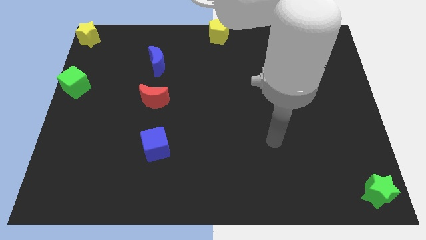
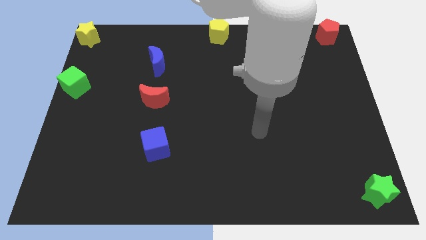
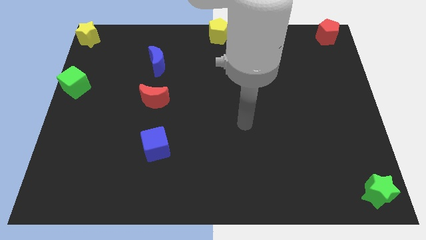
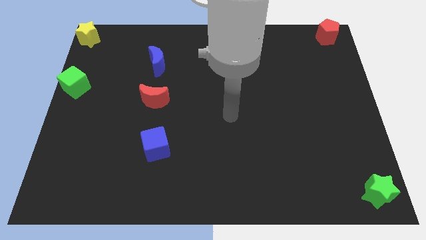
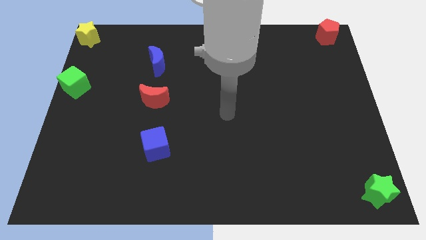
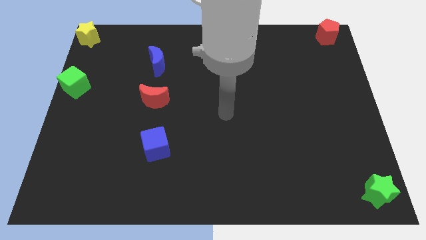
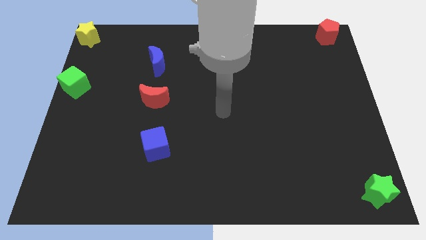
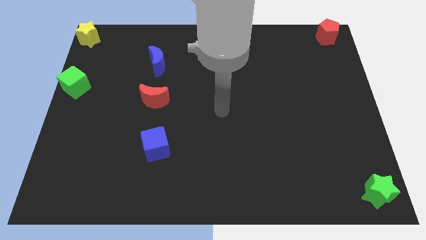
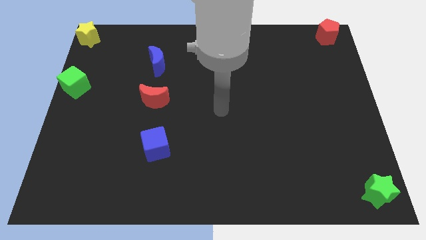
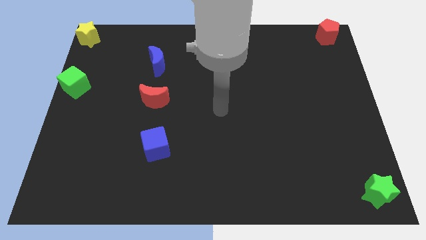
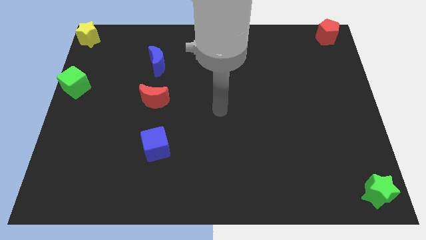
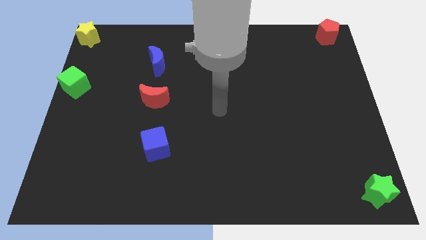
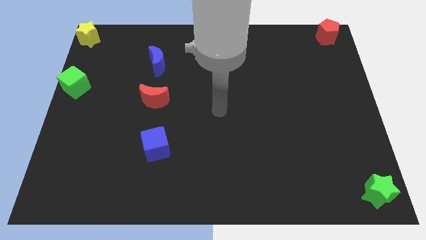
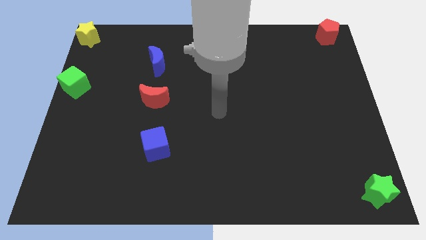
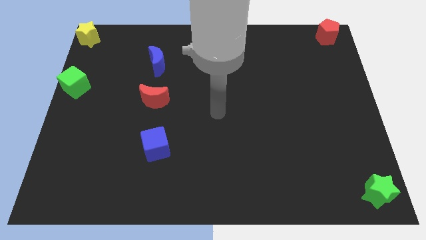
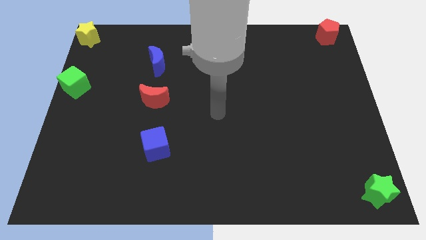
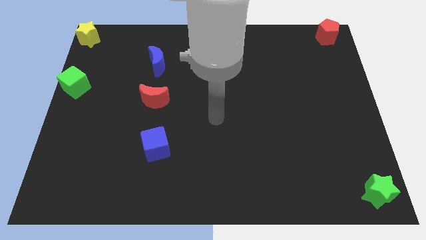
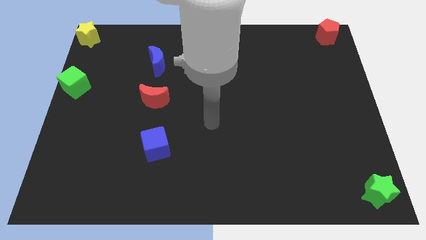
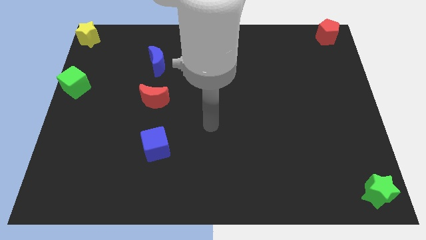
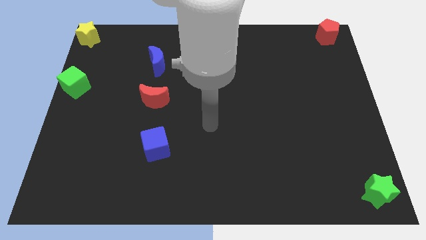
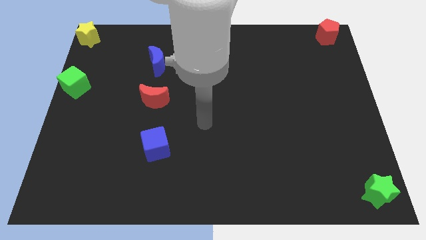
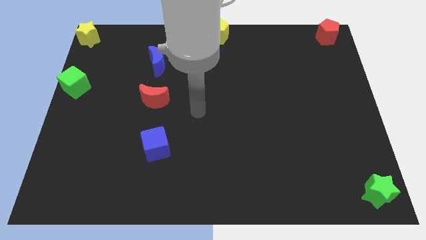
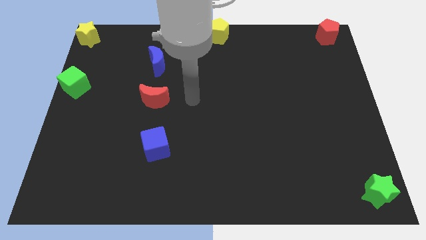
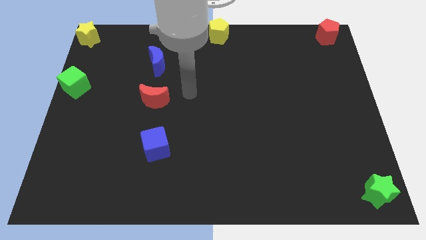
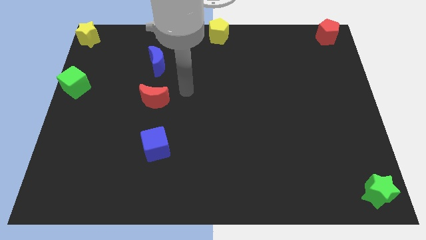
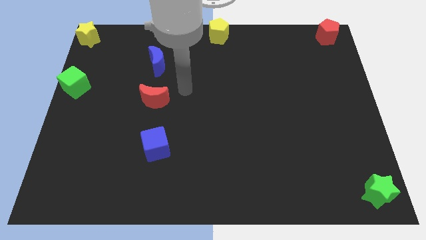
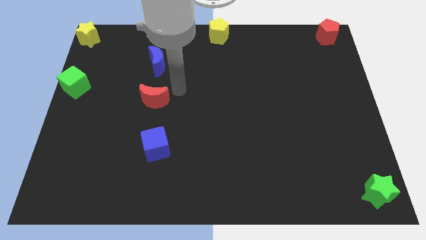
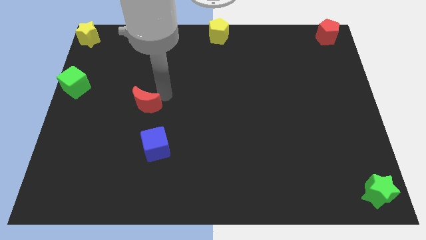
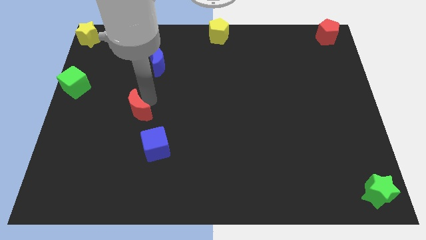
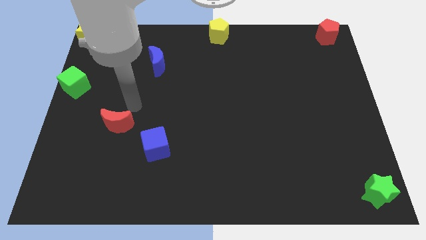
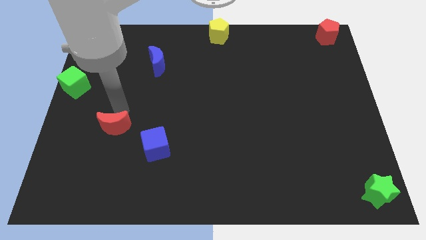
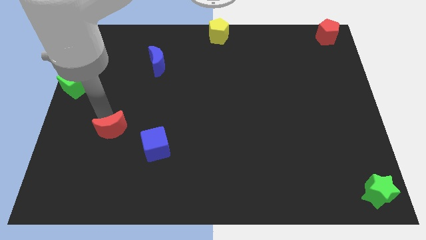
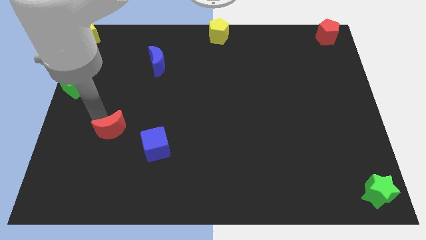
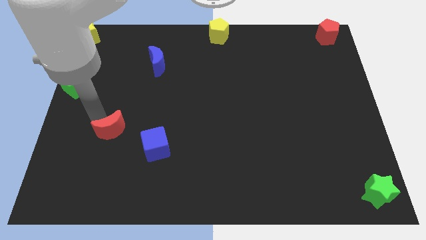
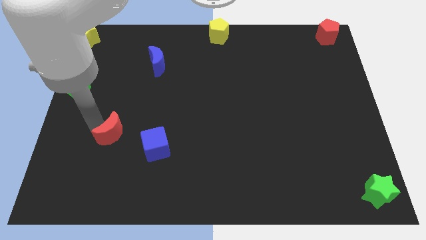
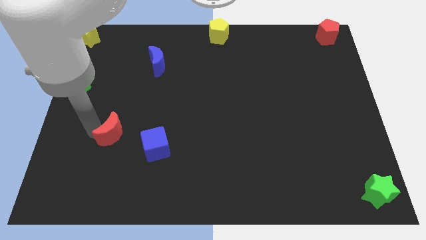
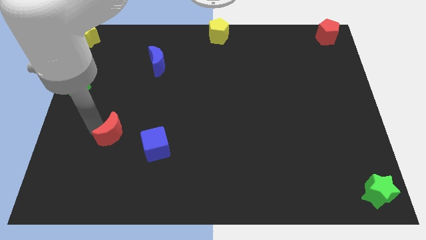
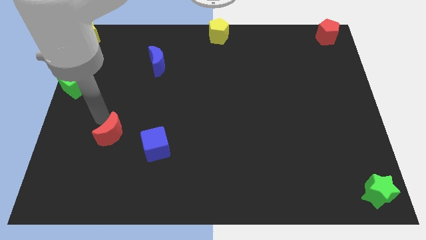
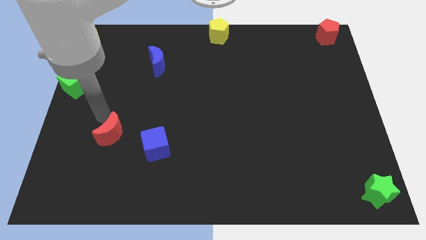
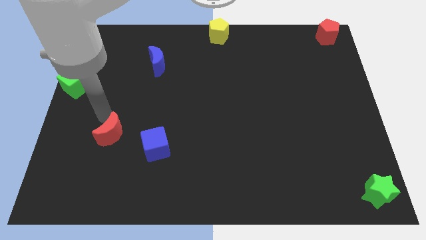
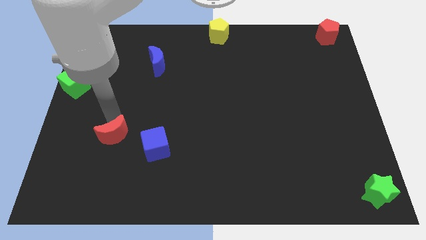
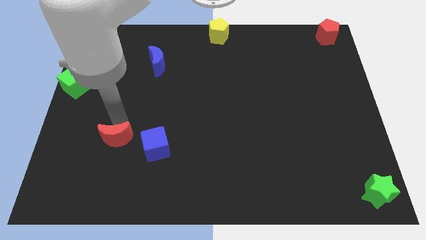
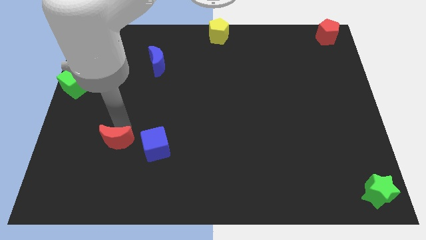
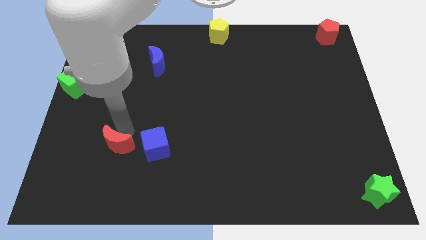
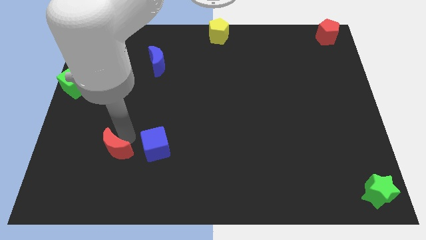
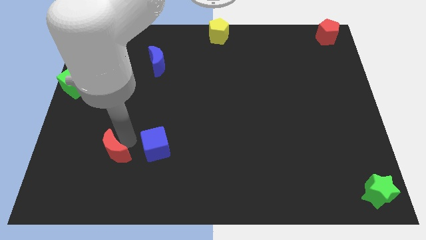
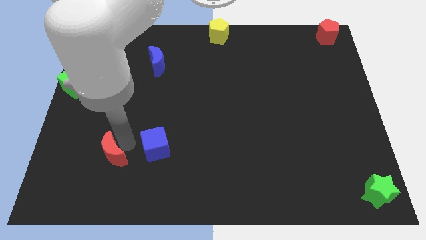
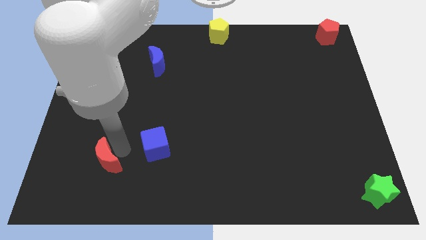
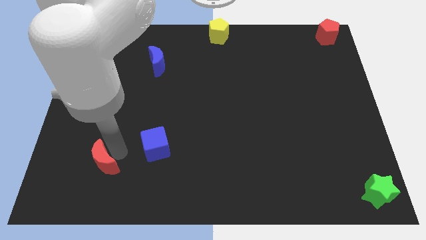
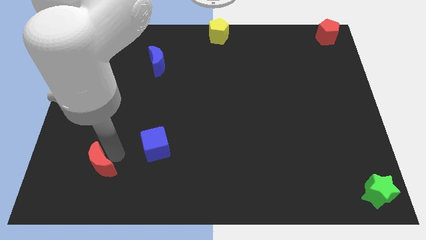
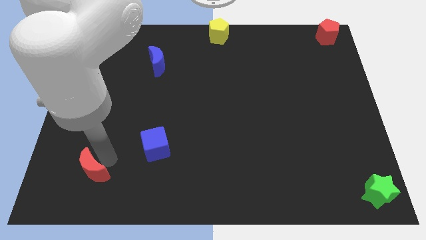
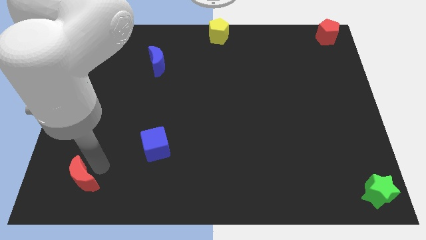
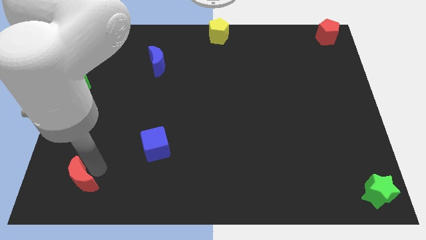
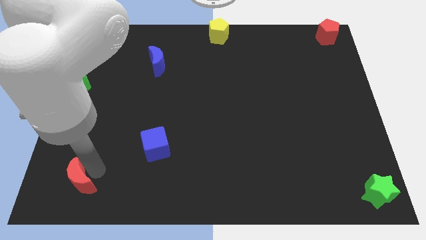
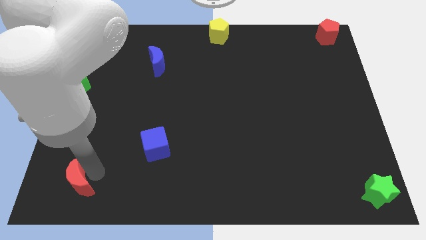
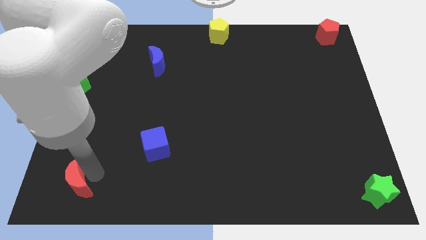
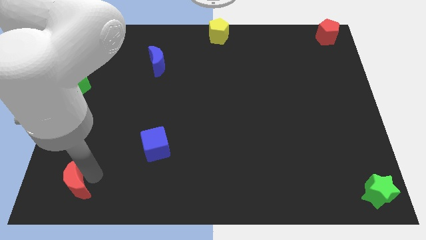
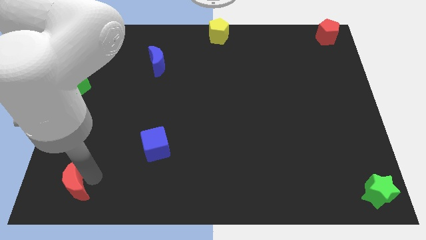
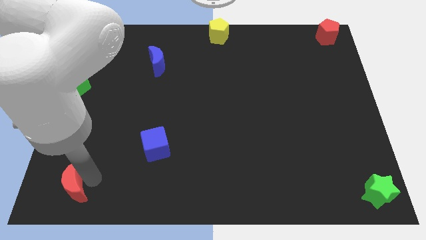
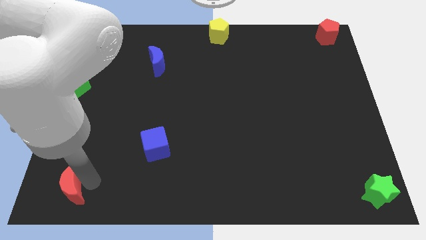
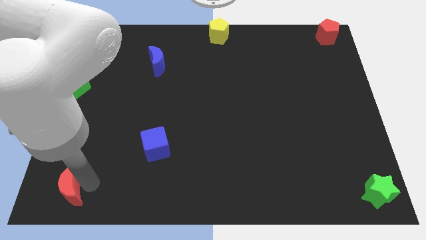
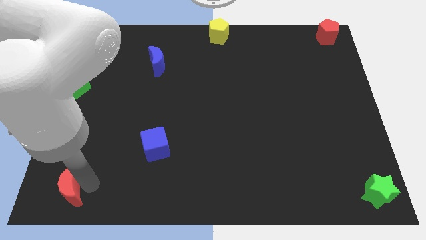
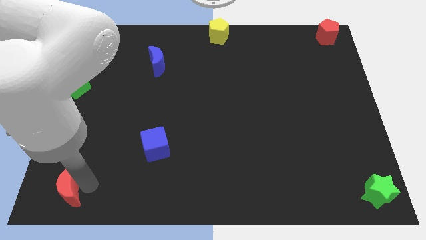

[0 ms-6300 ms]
move the red crescent to the bottom left corner of the board

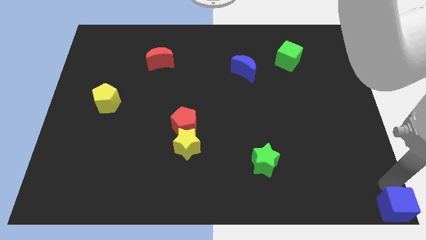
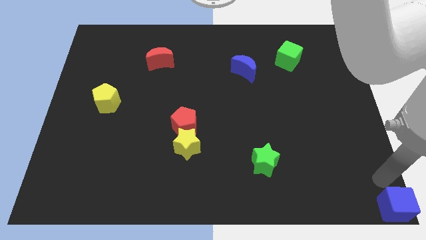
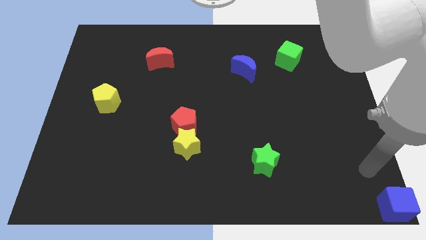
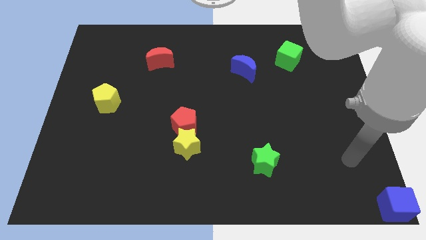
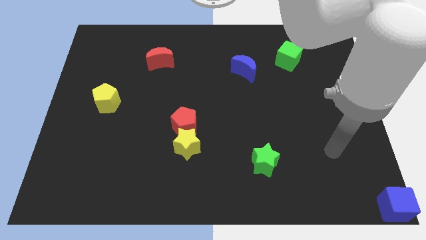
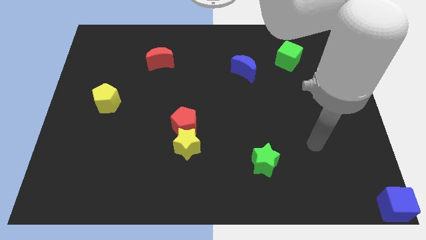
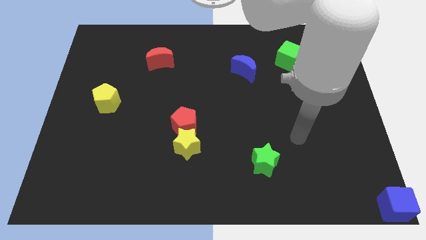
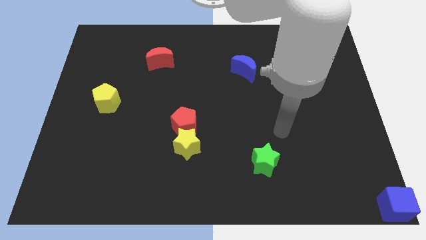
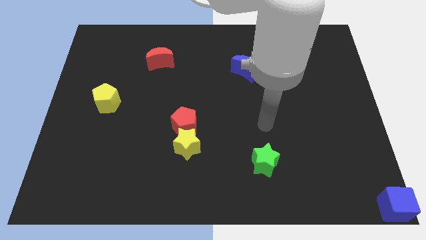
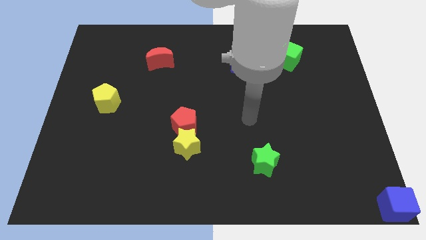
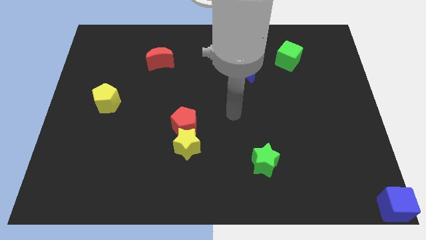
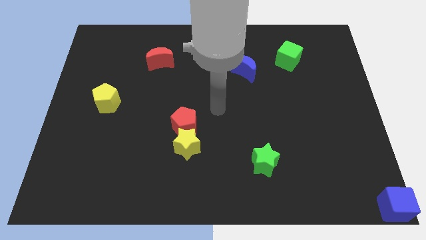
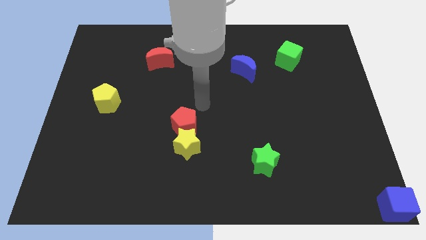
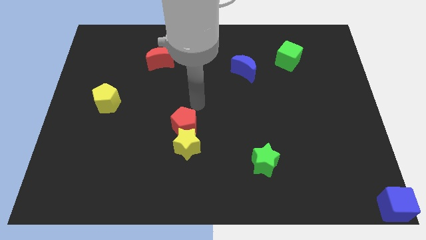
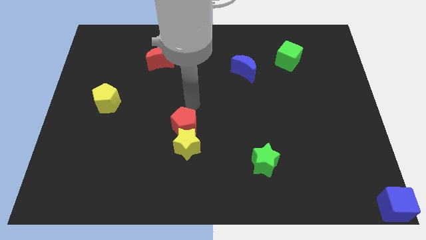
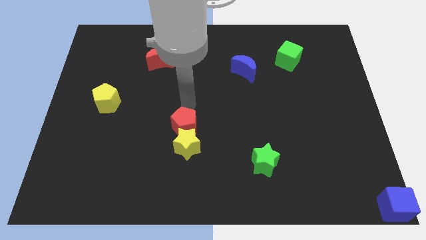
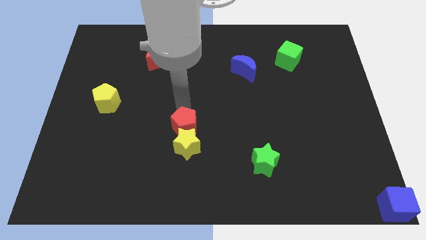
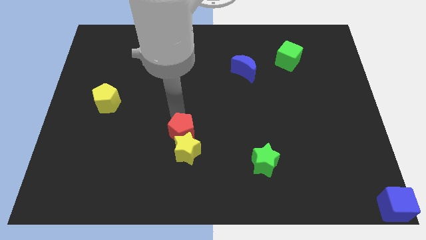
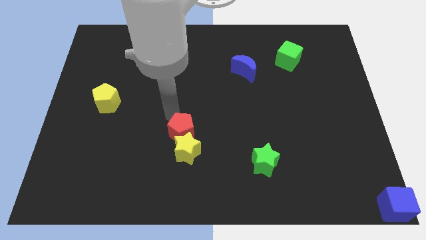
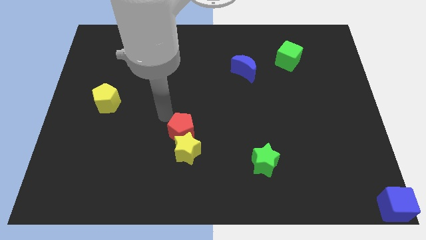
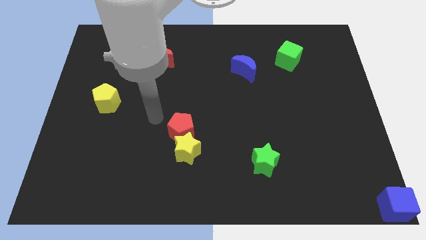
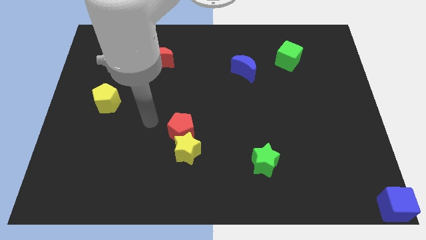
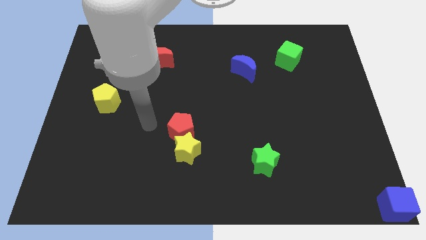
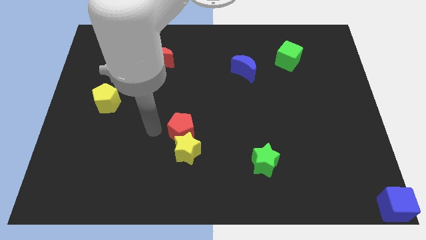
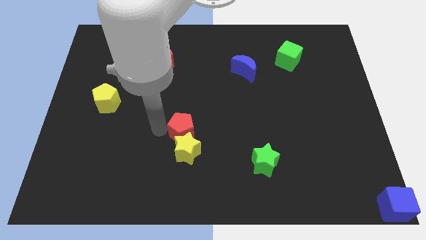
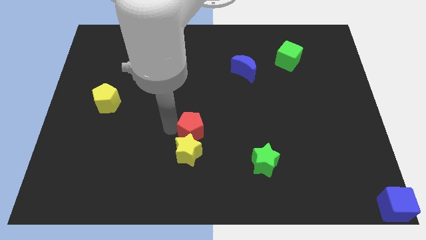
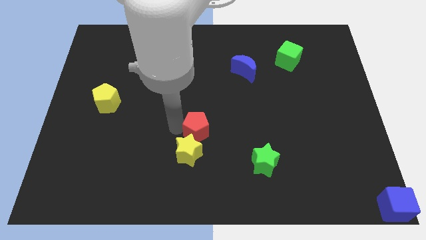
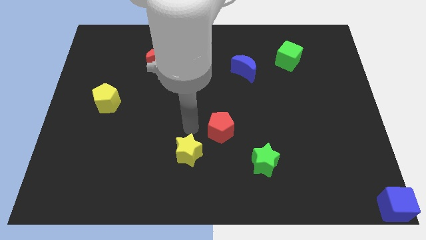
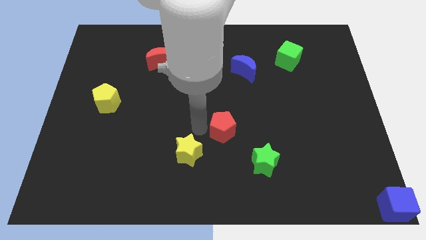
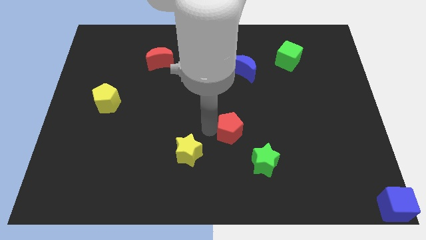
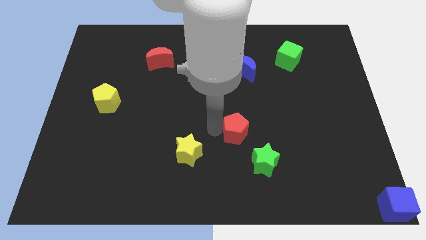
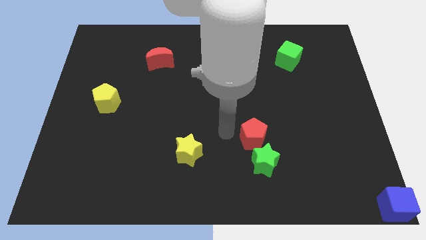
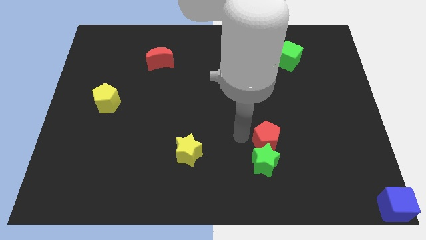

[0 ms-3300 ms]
push the red pentagon at the top of green star
